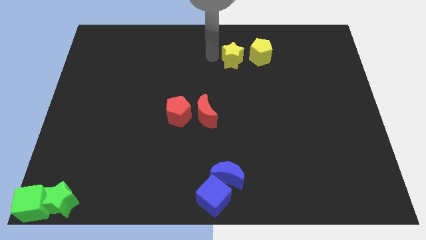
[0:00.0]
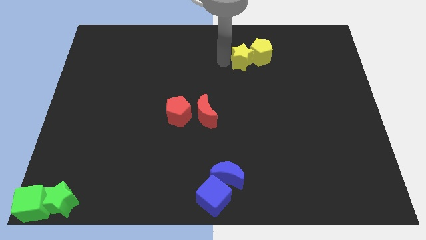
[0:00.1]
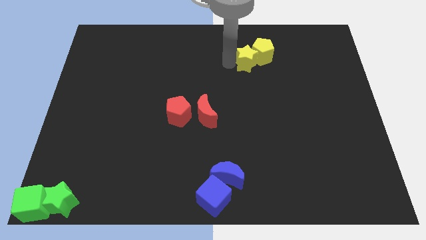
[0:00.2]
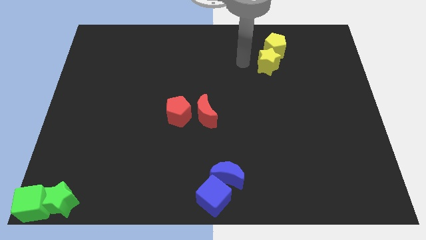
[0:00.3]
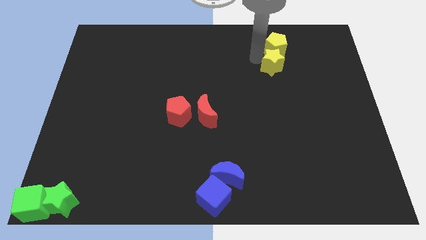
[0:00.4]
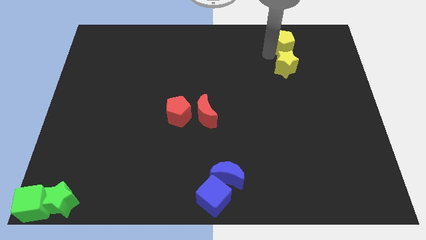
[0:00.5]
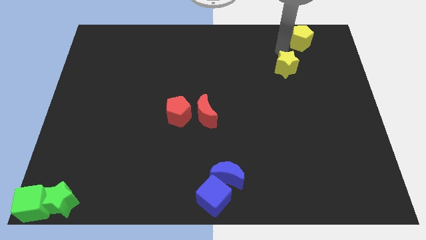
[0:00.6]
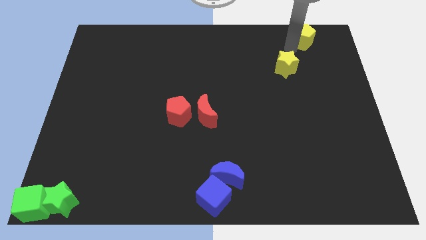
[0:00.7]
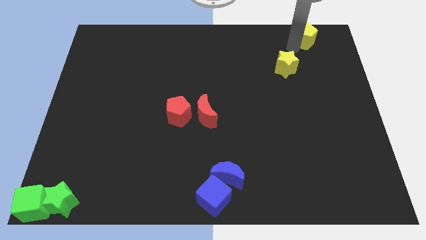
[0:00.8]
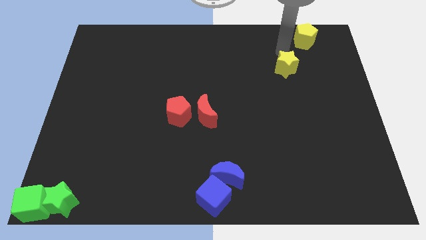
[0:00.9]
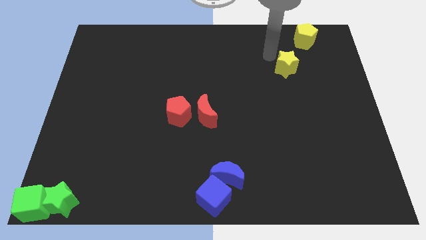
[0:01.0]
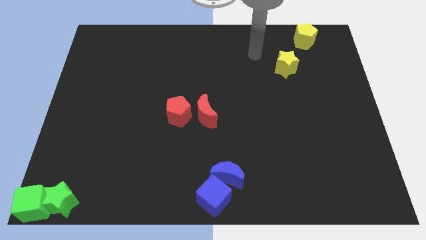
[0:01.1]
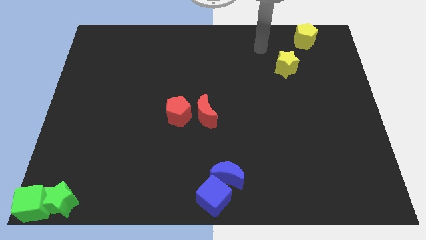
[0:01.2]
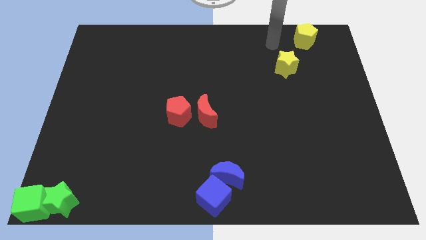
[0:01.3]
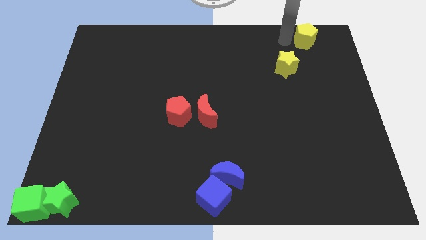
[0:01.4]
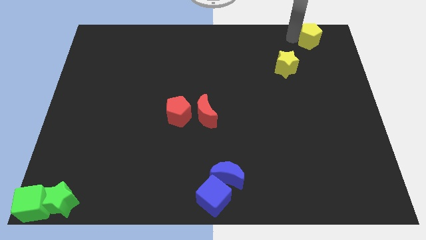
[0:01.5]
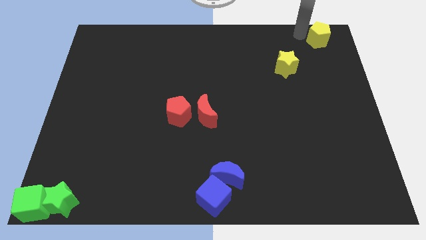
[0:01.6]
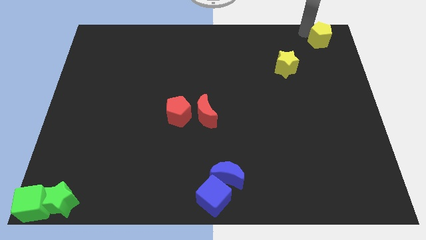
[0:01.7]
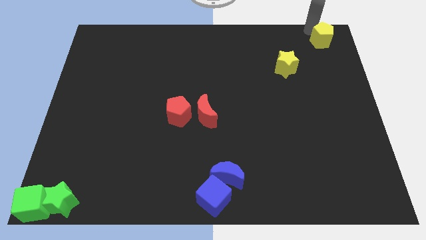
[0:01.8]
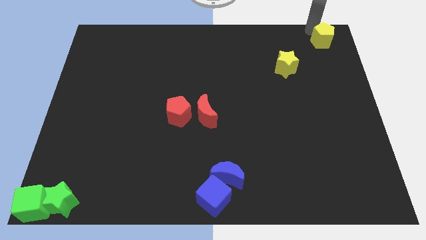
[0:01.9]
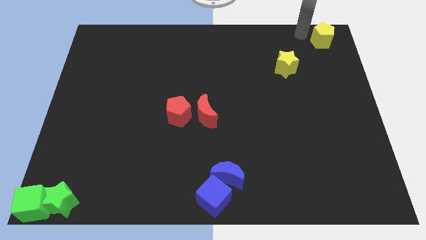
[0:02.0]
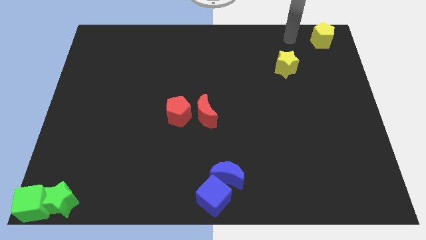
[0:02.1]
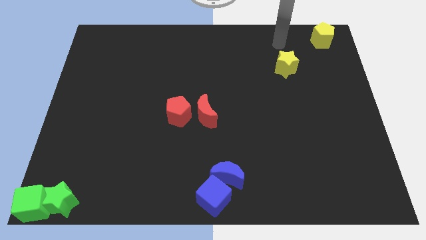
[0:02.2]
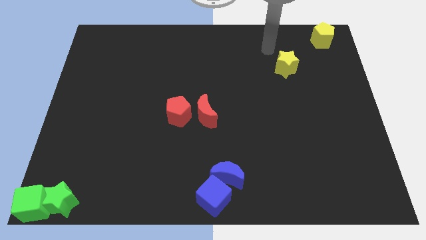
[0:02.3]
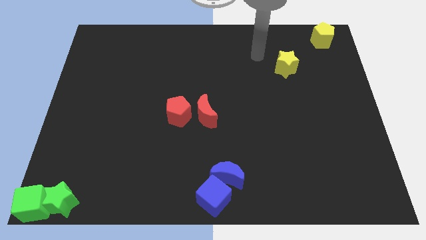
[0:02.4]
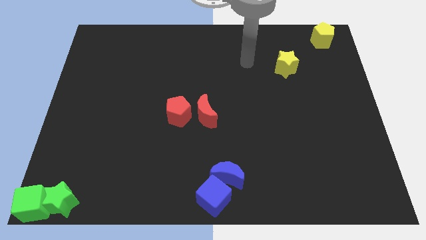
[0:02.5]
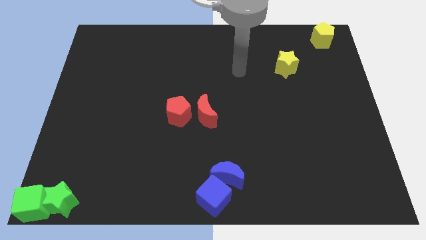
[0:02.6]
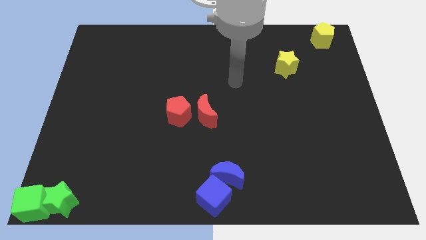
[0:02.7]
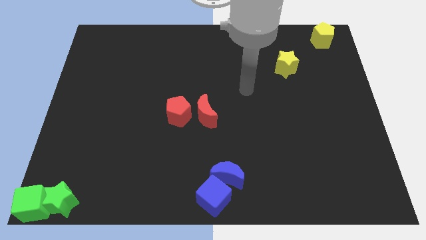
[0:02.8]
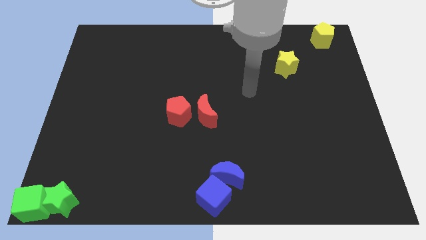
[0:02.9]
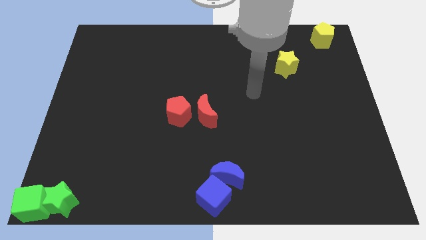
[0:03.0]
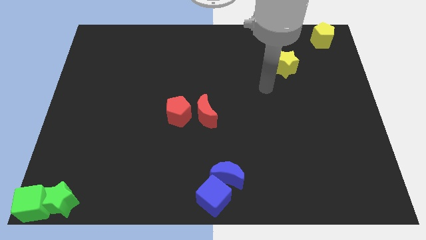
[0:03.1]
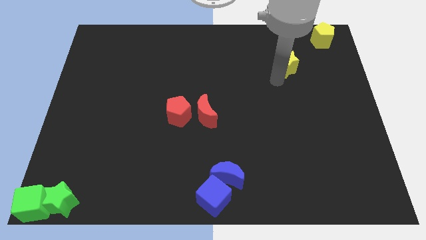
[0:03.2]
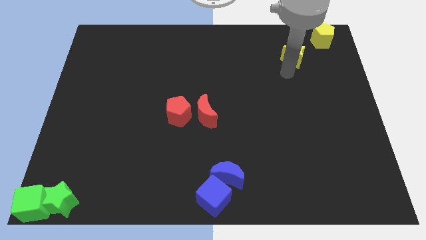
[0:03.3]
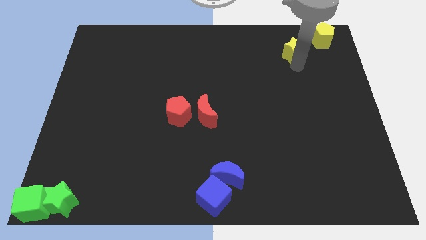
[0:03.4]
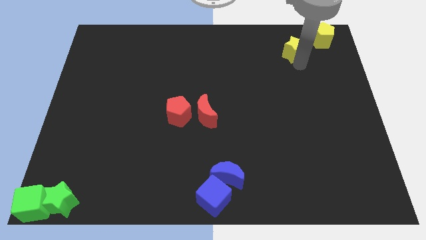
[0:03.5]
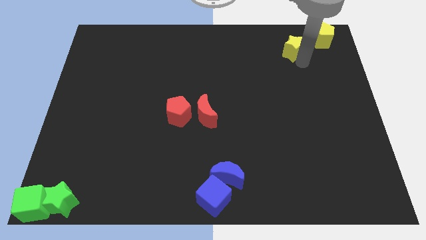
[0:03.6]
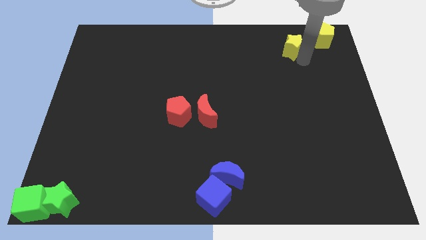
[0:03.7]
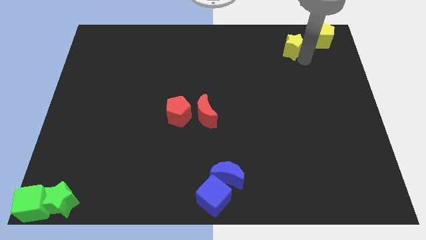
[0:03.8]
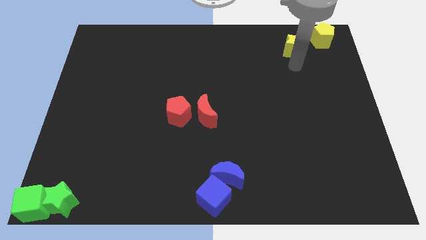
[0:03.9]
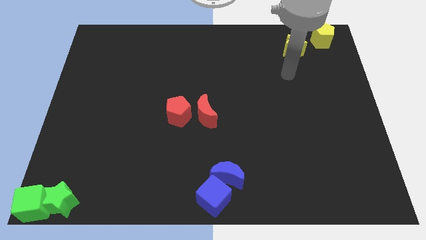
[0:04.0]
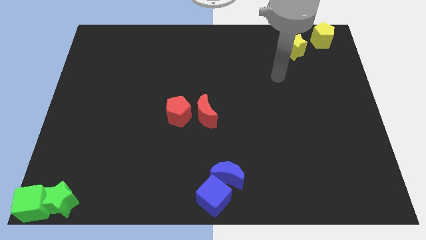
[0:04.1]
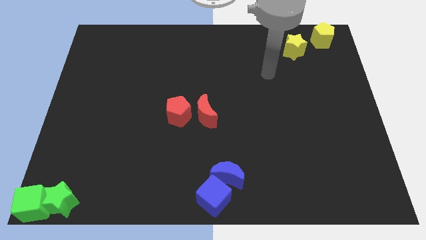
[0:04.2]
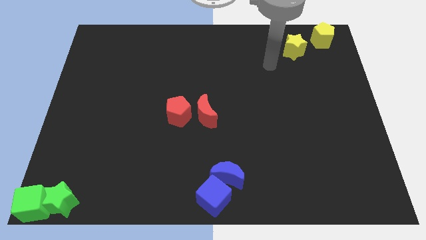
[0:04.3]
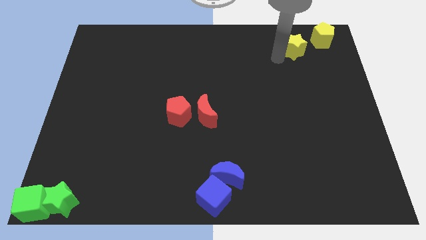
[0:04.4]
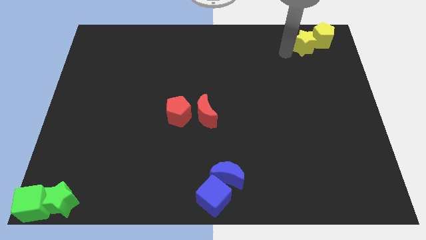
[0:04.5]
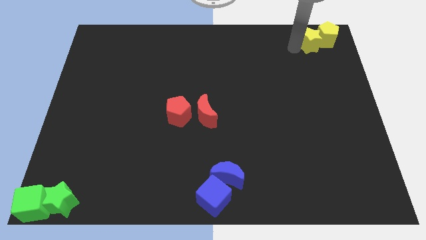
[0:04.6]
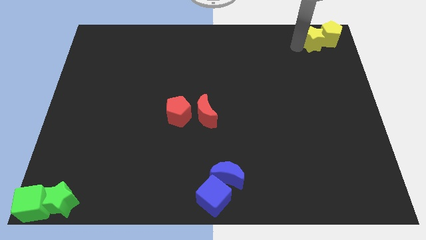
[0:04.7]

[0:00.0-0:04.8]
move the yellow star along with yellow pentagon towards the right top corner of the board

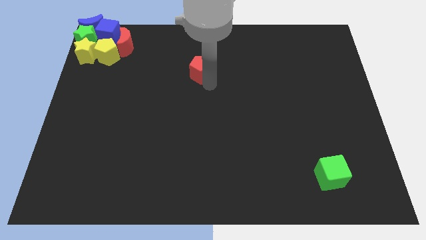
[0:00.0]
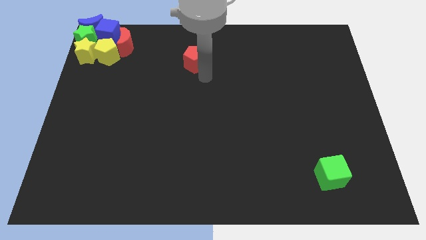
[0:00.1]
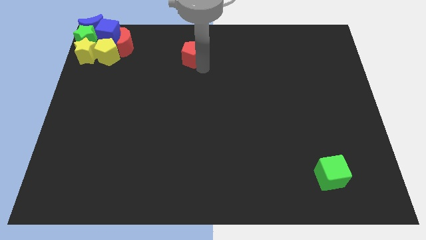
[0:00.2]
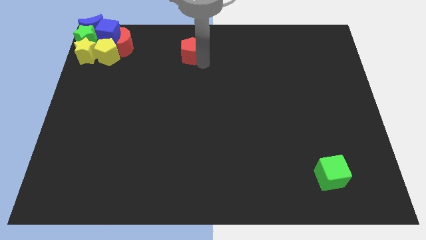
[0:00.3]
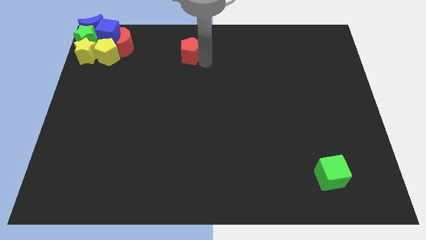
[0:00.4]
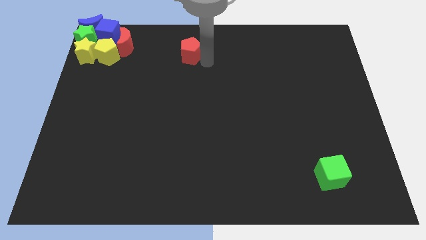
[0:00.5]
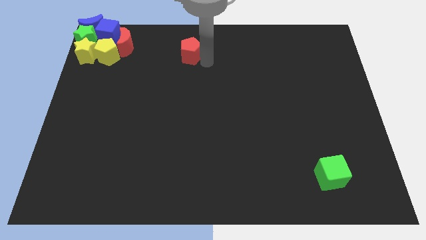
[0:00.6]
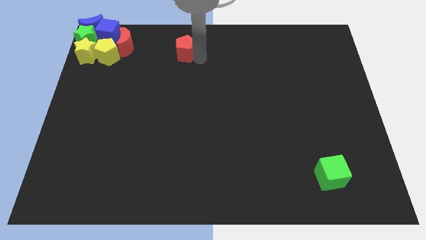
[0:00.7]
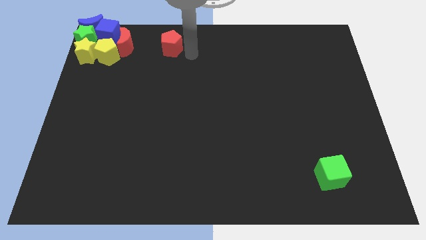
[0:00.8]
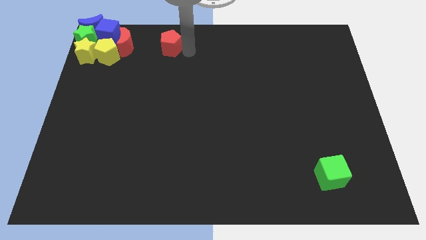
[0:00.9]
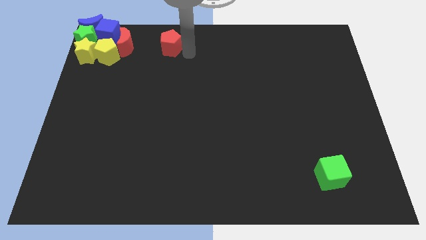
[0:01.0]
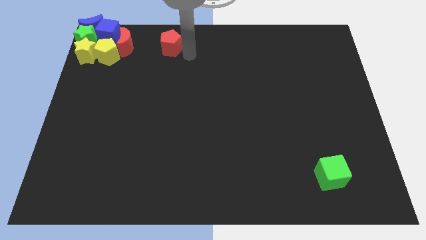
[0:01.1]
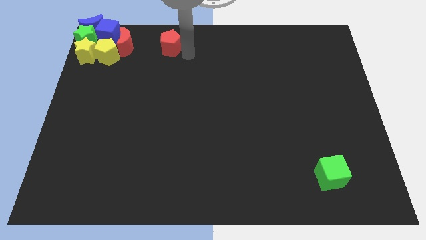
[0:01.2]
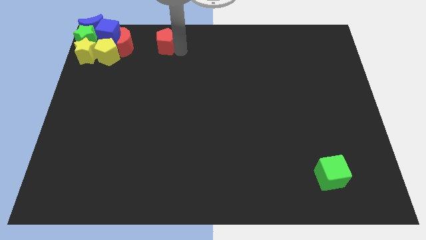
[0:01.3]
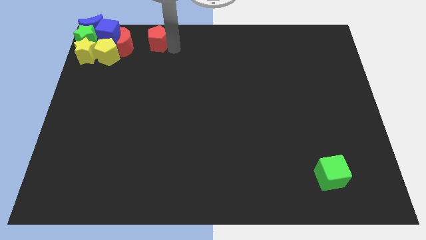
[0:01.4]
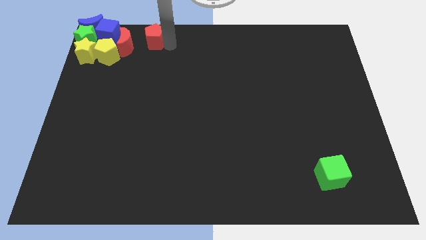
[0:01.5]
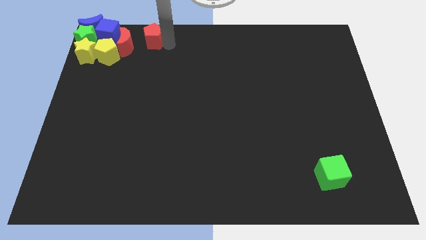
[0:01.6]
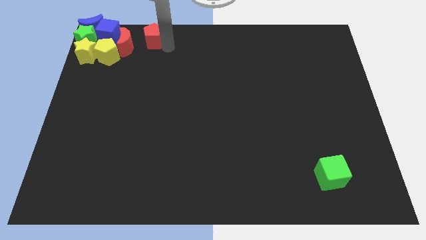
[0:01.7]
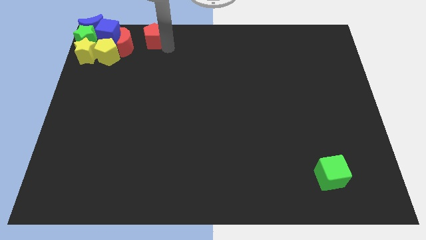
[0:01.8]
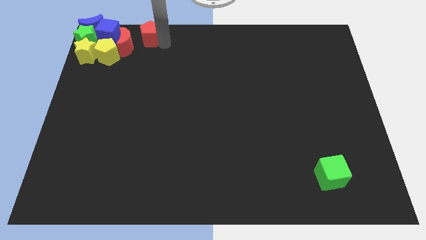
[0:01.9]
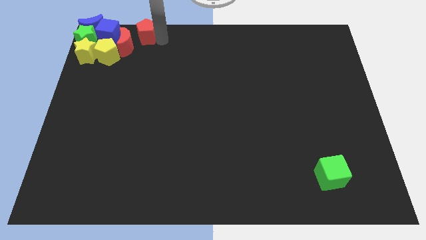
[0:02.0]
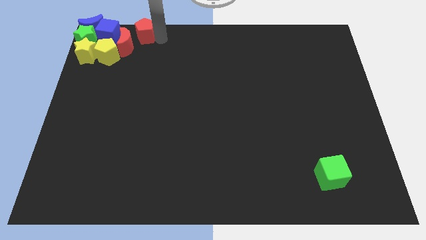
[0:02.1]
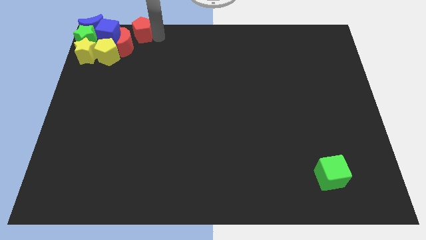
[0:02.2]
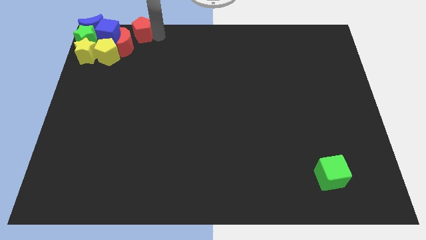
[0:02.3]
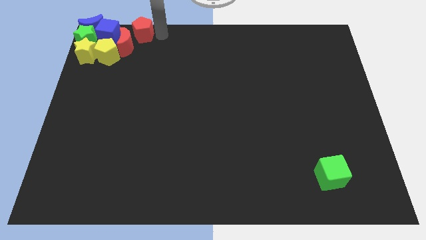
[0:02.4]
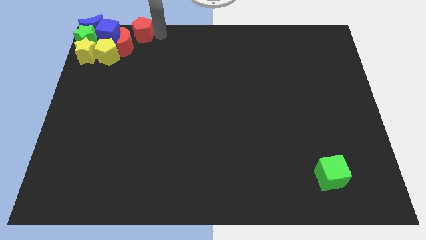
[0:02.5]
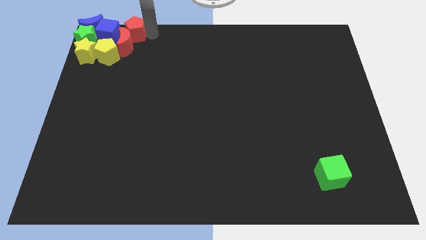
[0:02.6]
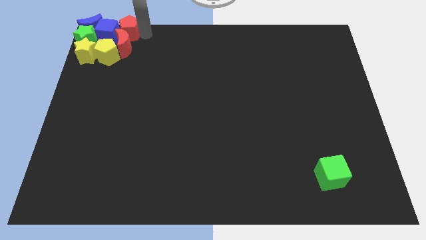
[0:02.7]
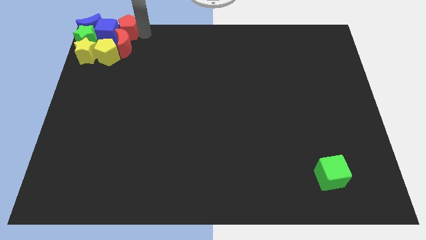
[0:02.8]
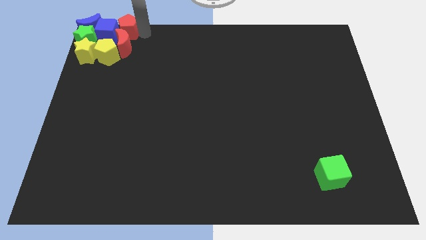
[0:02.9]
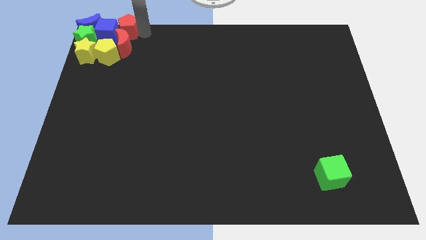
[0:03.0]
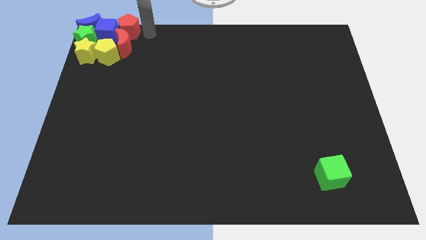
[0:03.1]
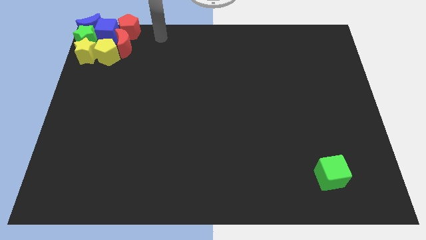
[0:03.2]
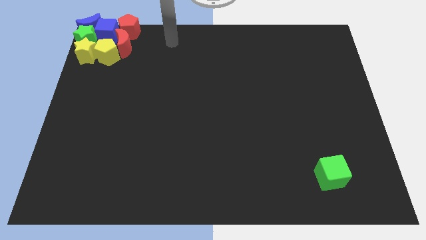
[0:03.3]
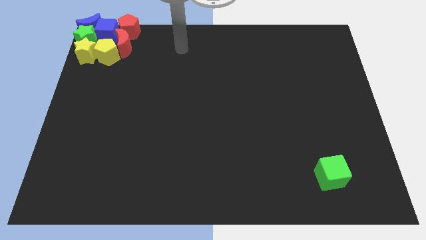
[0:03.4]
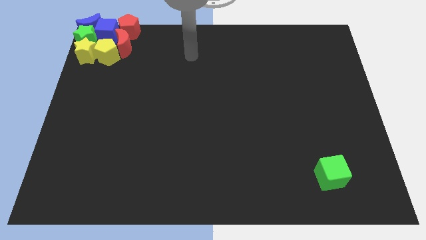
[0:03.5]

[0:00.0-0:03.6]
move the red pentagon to the top left side of the board

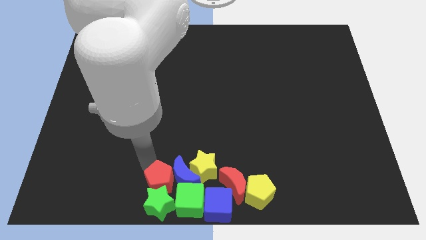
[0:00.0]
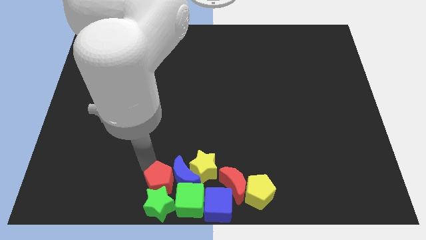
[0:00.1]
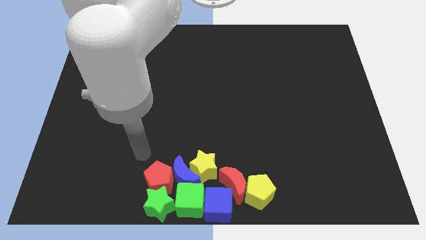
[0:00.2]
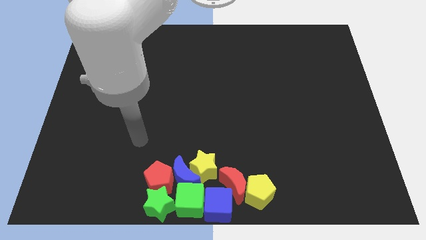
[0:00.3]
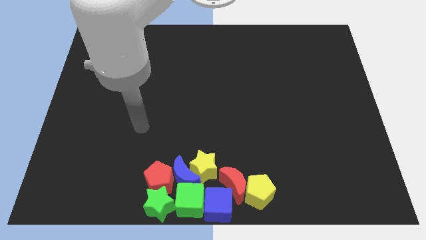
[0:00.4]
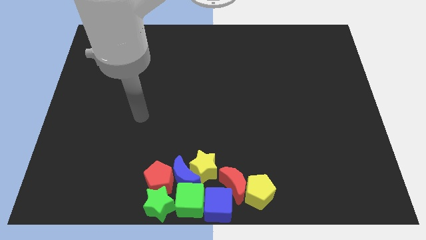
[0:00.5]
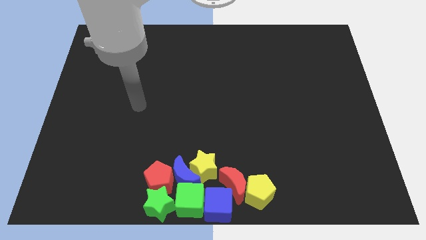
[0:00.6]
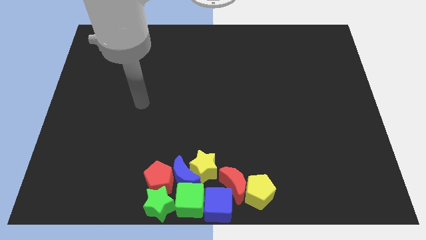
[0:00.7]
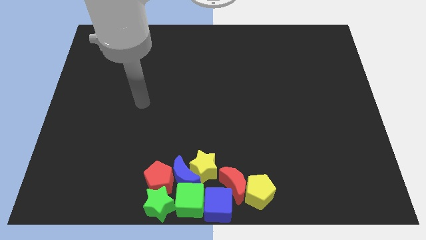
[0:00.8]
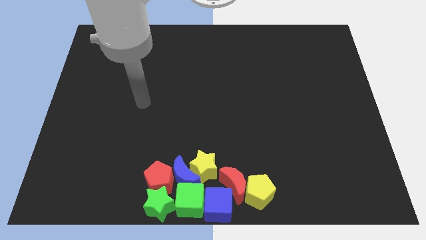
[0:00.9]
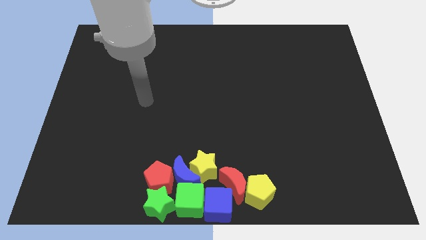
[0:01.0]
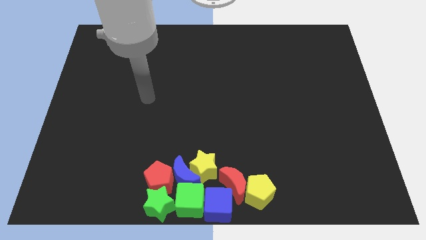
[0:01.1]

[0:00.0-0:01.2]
move your arm away from red pentagon
